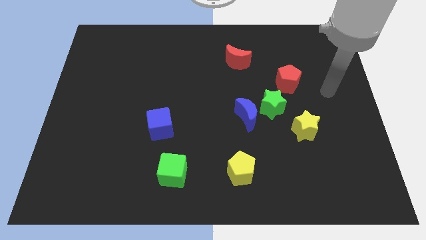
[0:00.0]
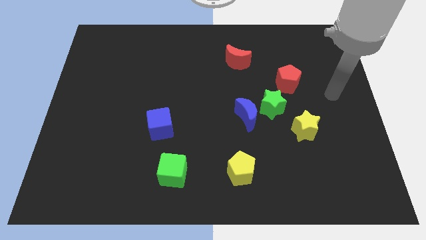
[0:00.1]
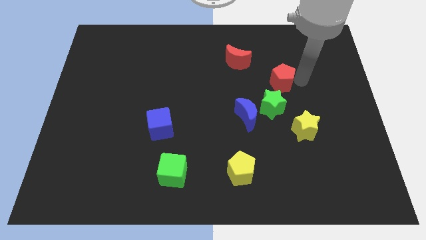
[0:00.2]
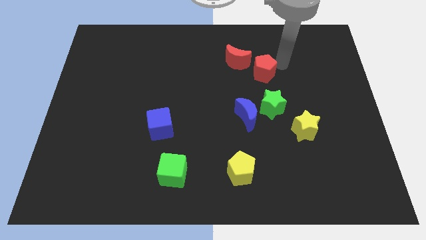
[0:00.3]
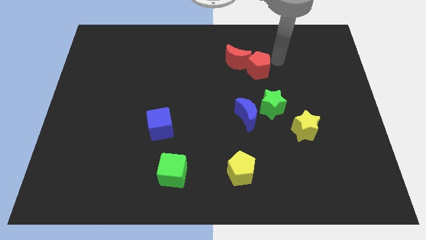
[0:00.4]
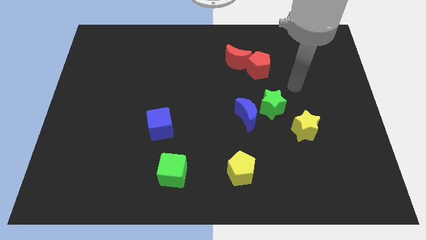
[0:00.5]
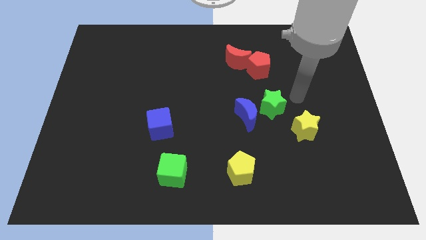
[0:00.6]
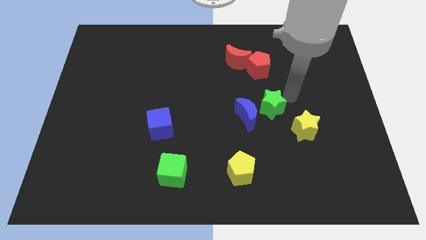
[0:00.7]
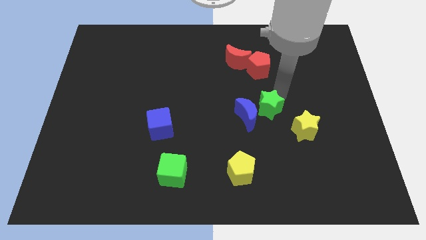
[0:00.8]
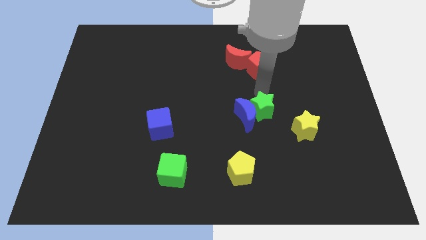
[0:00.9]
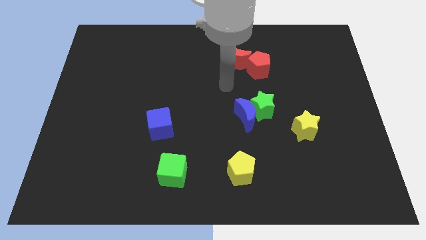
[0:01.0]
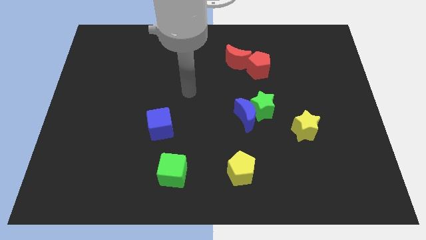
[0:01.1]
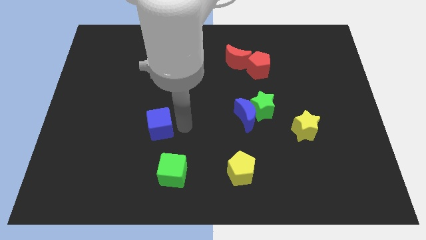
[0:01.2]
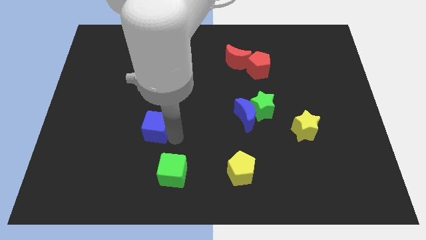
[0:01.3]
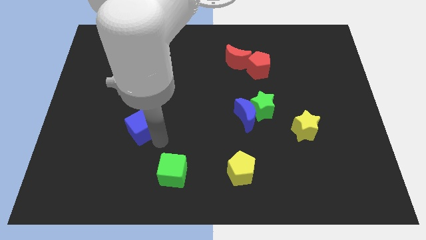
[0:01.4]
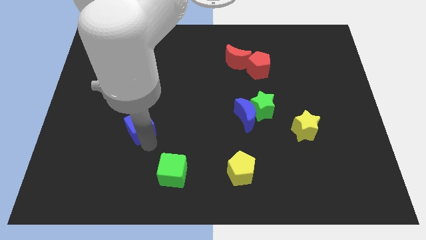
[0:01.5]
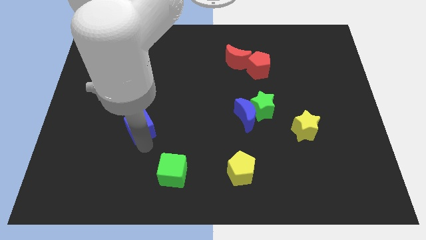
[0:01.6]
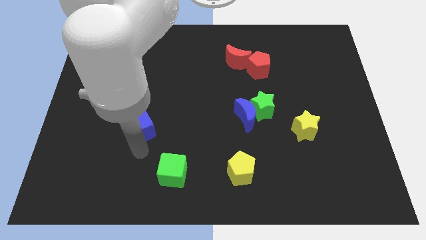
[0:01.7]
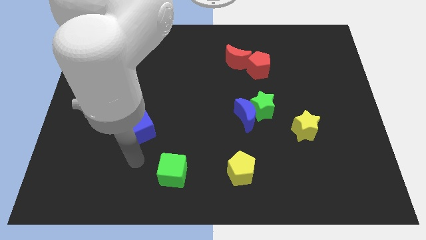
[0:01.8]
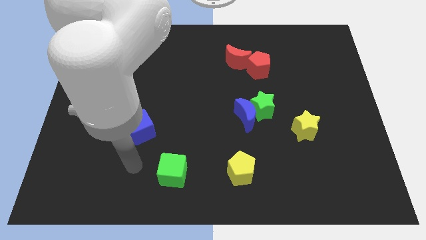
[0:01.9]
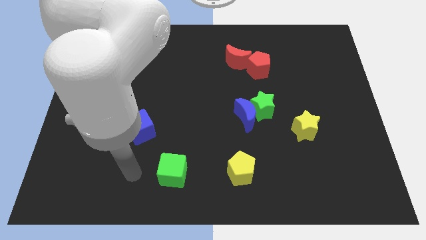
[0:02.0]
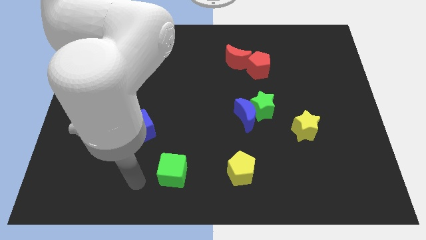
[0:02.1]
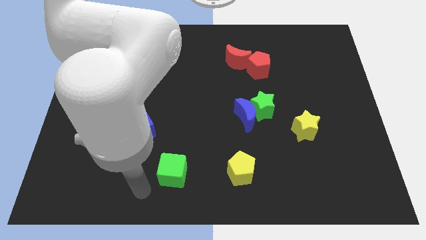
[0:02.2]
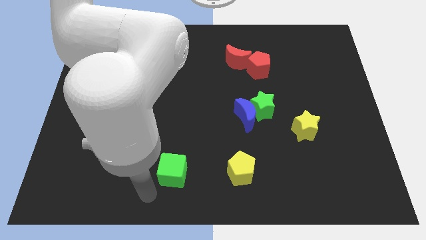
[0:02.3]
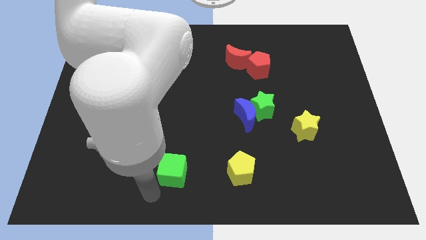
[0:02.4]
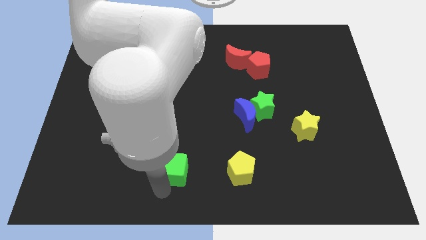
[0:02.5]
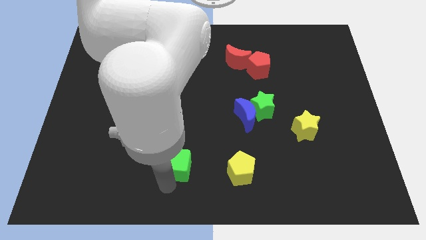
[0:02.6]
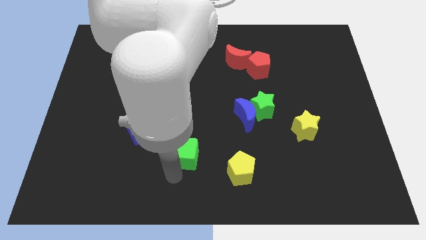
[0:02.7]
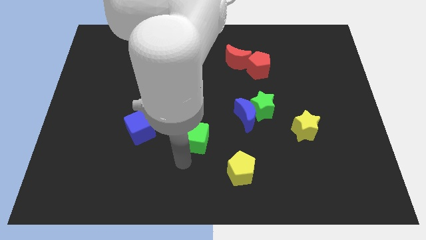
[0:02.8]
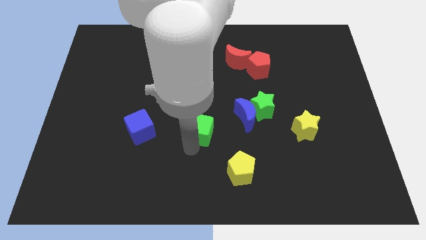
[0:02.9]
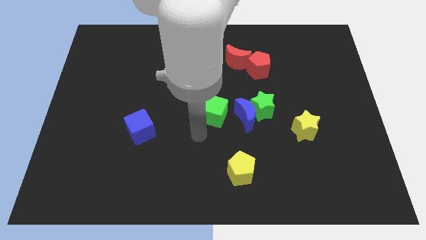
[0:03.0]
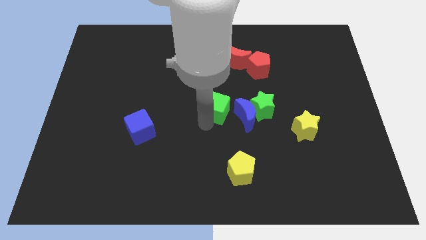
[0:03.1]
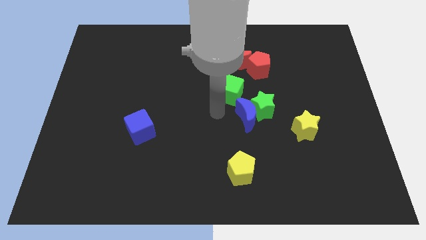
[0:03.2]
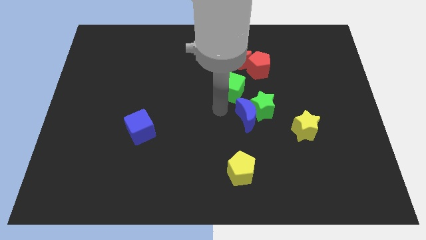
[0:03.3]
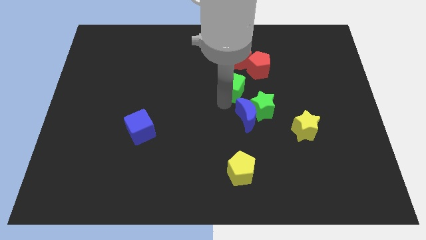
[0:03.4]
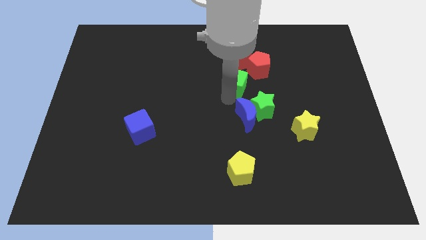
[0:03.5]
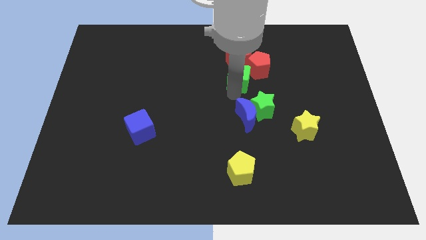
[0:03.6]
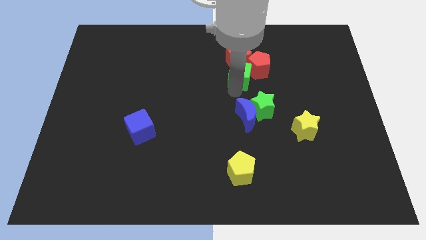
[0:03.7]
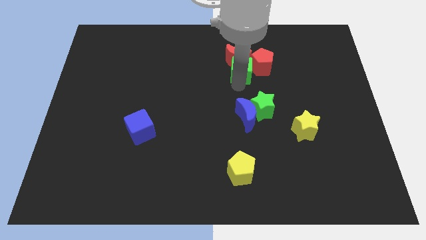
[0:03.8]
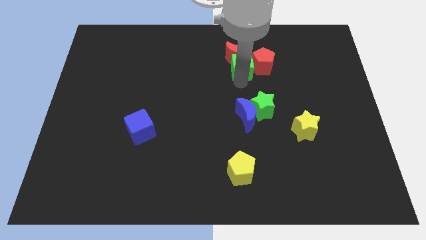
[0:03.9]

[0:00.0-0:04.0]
slide the green cube towards the red moon

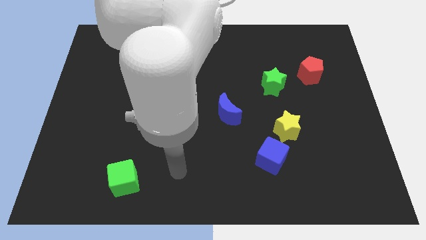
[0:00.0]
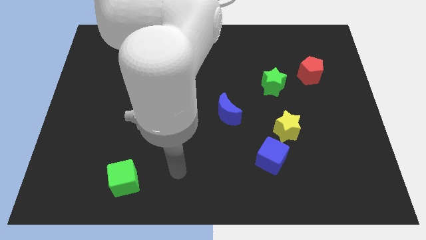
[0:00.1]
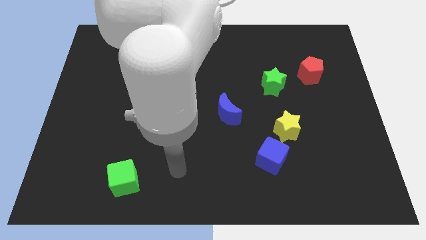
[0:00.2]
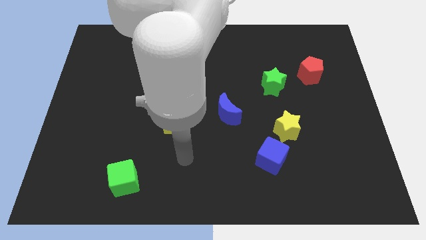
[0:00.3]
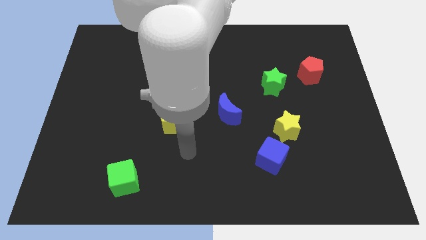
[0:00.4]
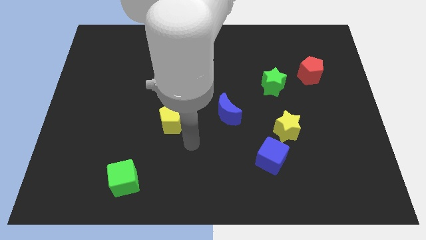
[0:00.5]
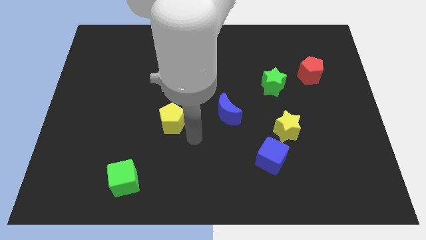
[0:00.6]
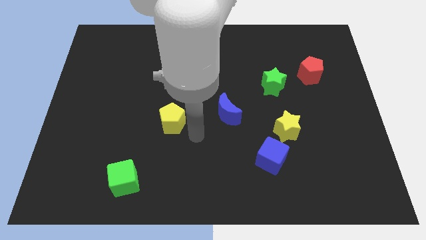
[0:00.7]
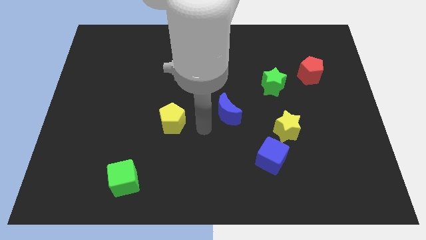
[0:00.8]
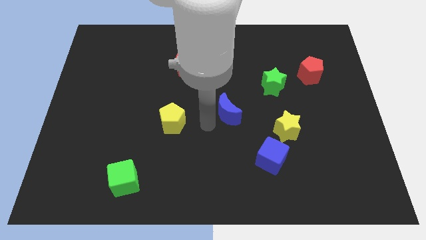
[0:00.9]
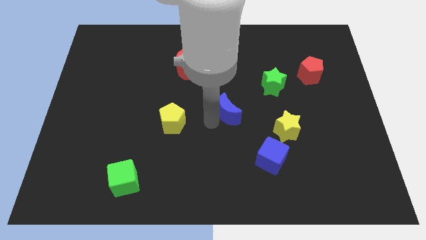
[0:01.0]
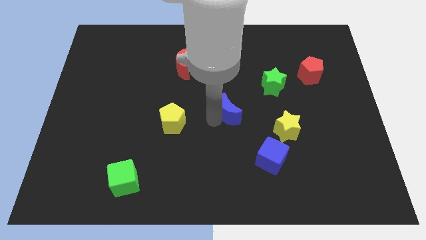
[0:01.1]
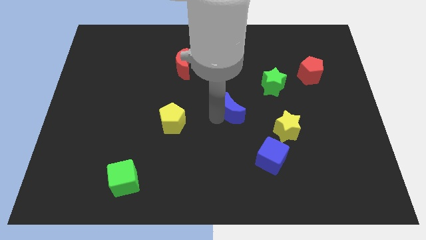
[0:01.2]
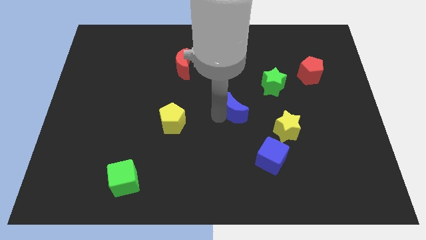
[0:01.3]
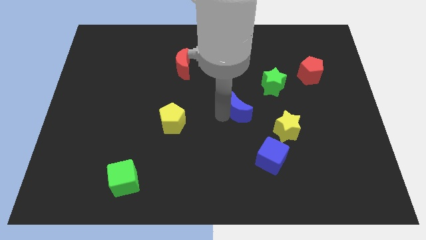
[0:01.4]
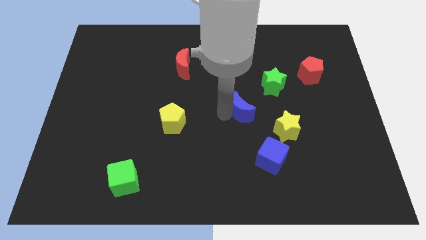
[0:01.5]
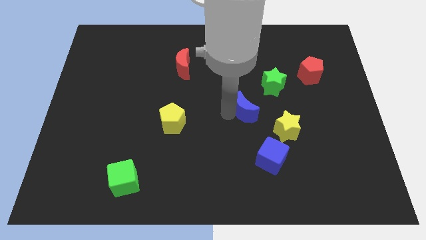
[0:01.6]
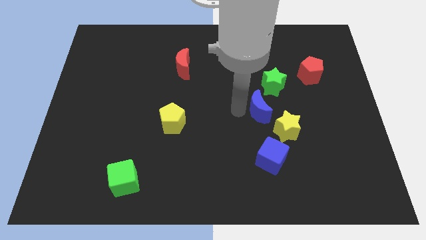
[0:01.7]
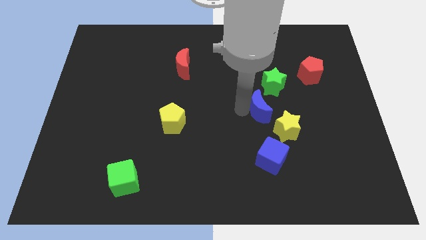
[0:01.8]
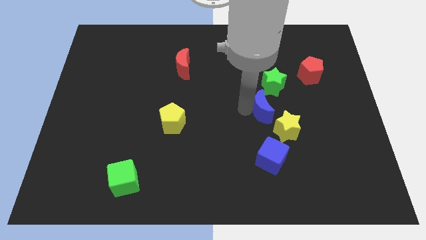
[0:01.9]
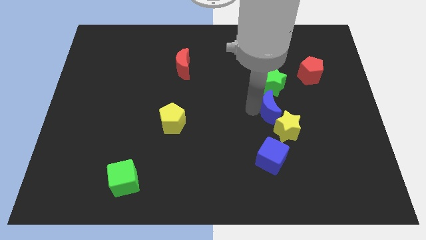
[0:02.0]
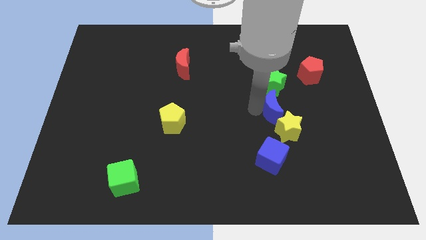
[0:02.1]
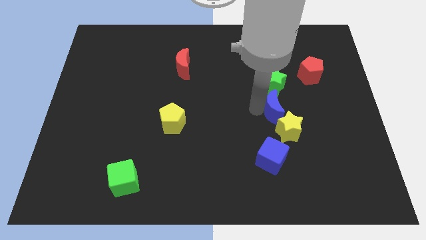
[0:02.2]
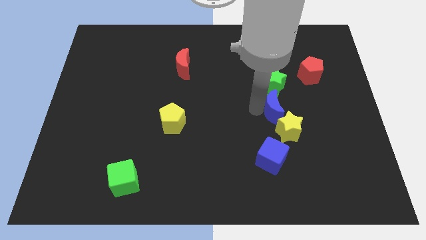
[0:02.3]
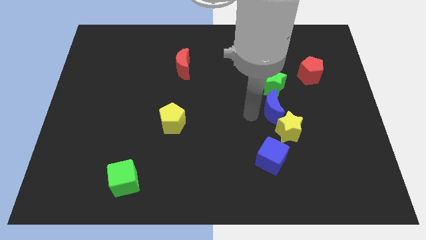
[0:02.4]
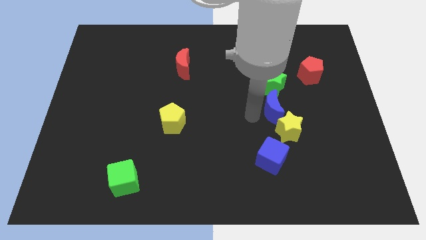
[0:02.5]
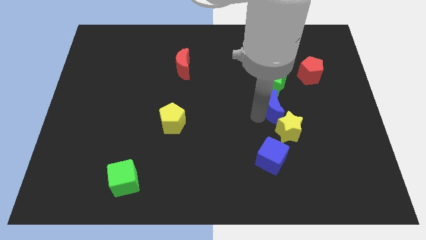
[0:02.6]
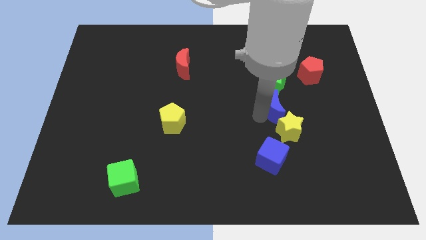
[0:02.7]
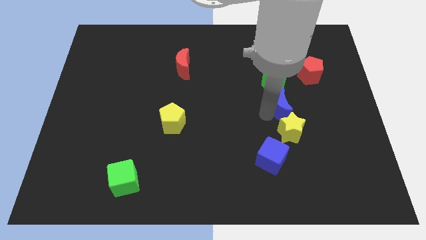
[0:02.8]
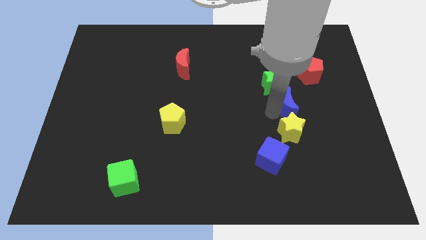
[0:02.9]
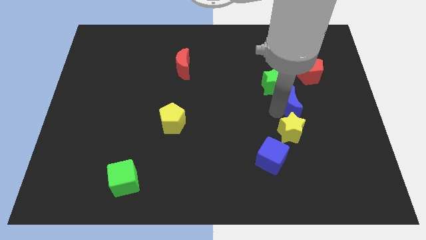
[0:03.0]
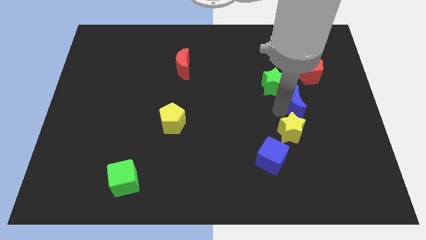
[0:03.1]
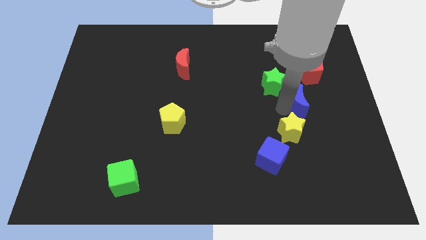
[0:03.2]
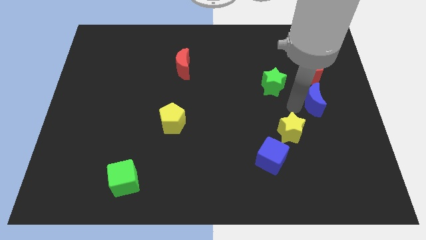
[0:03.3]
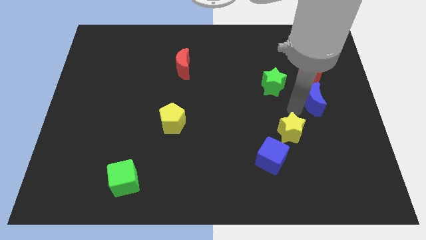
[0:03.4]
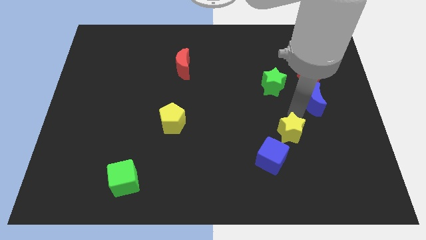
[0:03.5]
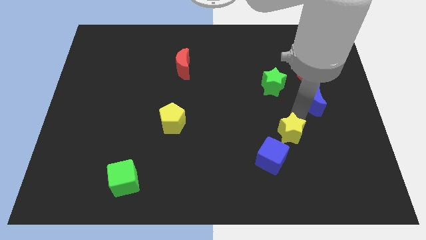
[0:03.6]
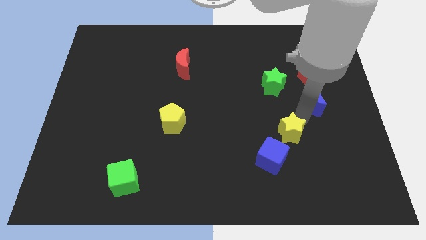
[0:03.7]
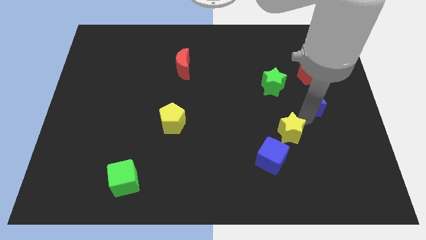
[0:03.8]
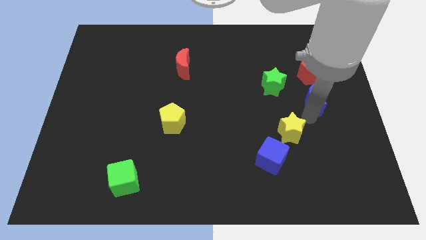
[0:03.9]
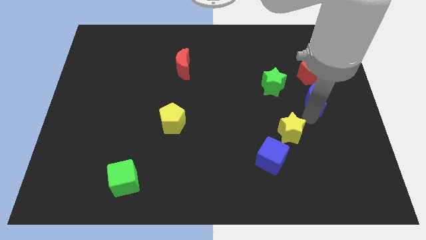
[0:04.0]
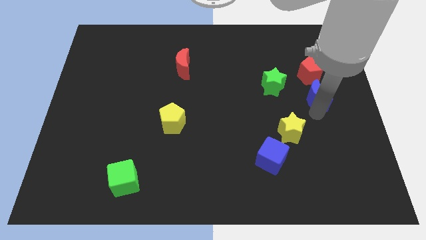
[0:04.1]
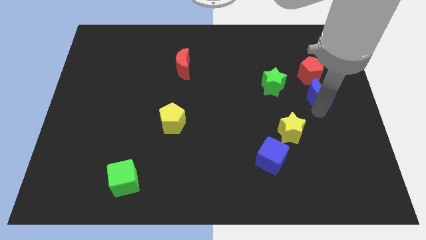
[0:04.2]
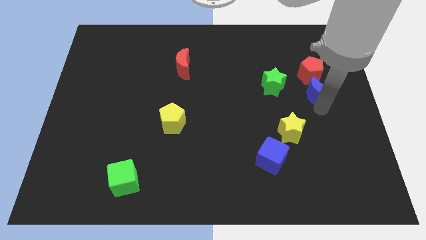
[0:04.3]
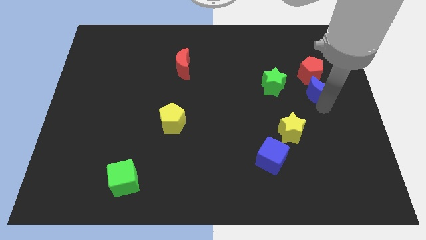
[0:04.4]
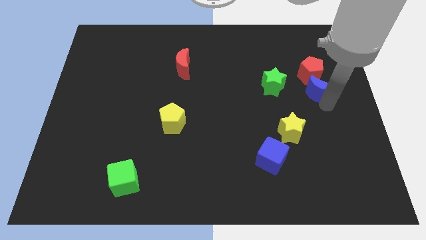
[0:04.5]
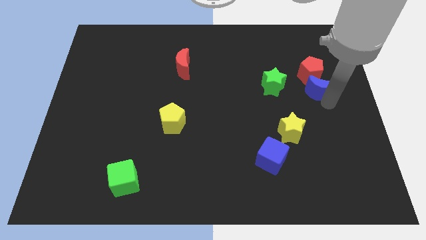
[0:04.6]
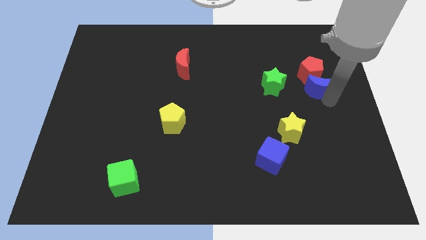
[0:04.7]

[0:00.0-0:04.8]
push the blue moon towards the red pentagon
